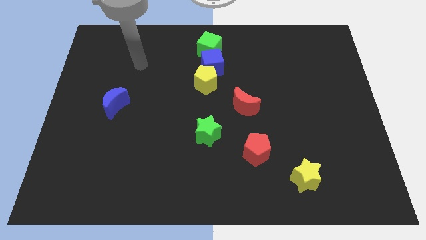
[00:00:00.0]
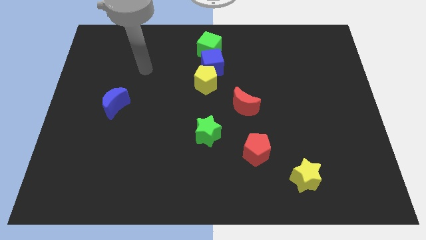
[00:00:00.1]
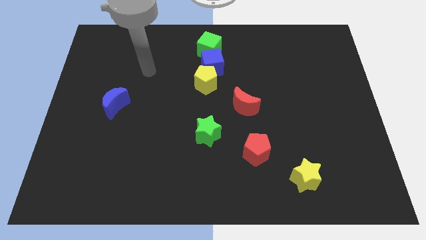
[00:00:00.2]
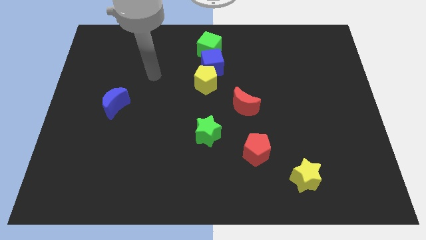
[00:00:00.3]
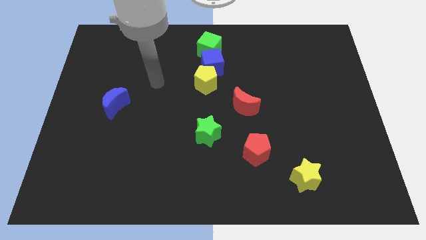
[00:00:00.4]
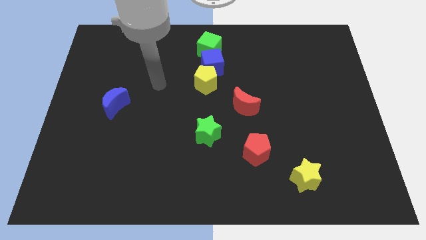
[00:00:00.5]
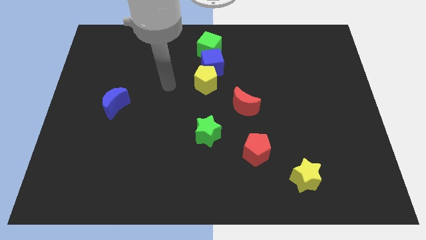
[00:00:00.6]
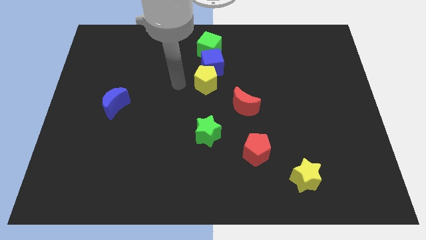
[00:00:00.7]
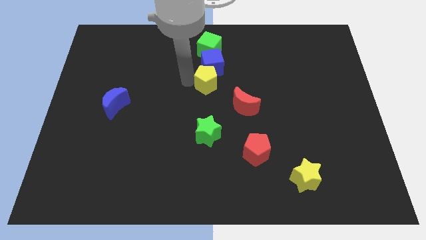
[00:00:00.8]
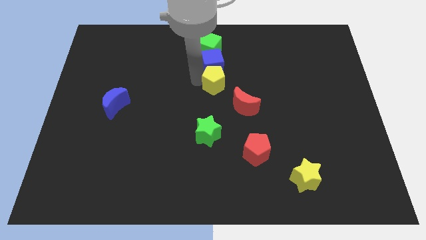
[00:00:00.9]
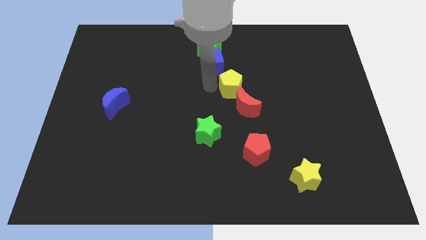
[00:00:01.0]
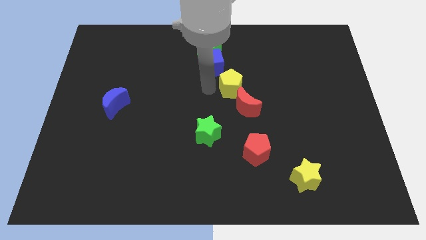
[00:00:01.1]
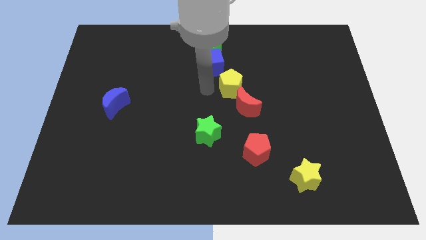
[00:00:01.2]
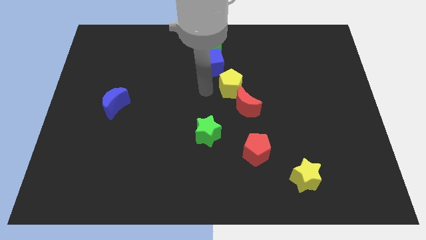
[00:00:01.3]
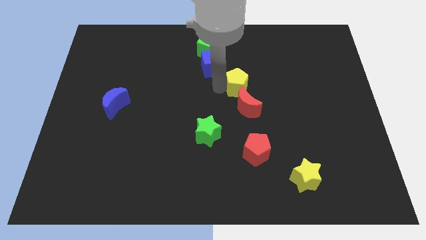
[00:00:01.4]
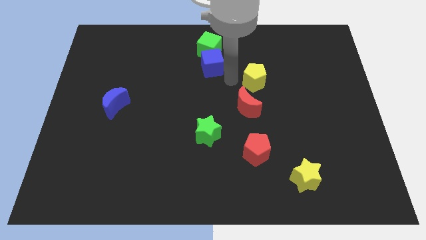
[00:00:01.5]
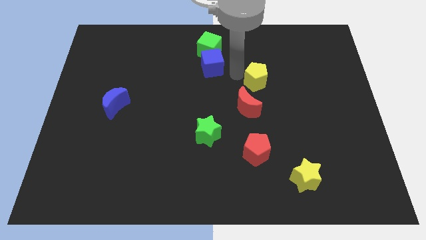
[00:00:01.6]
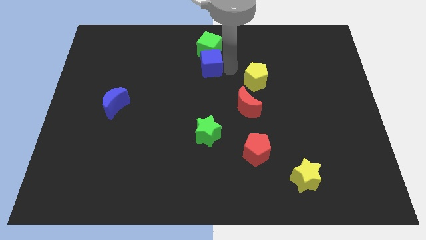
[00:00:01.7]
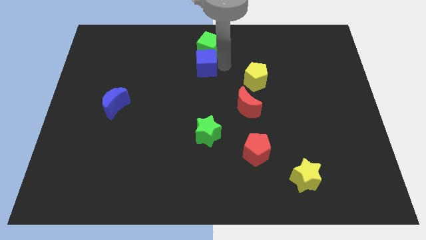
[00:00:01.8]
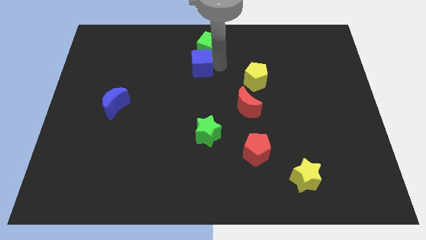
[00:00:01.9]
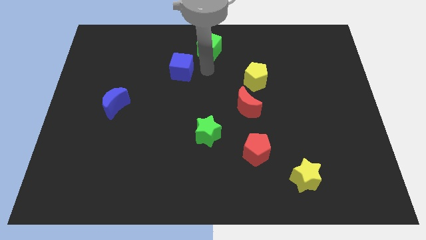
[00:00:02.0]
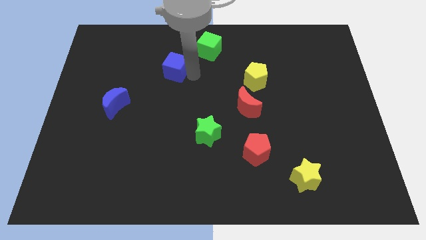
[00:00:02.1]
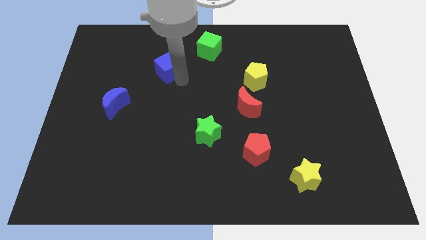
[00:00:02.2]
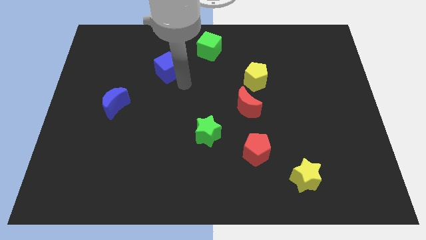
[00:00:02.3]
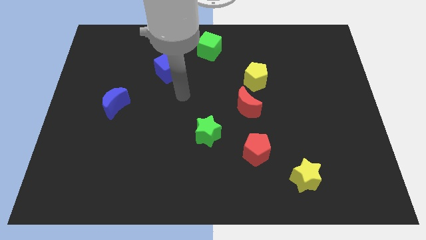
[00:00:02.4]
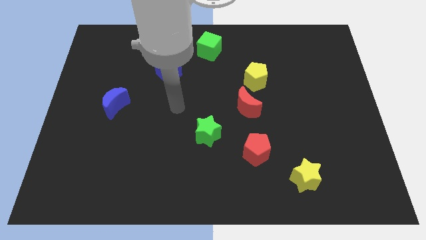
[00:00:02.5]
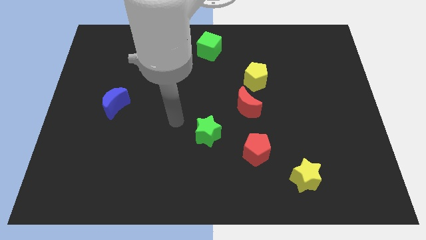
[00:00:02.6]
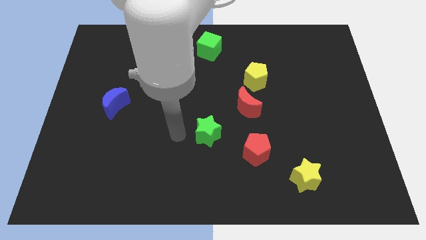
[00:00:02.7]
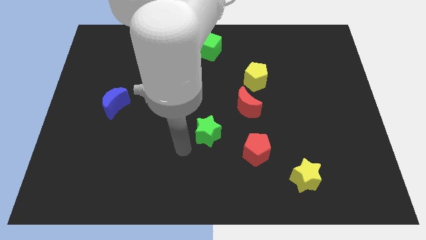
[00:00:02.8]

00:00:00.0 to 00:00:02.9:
separate blue cube and yellow pentagon

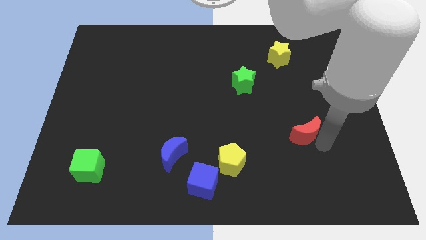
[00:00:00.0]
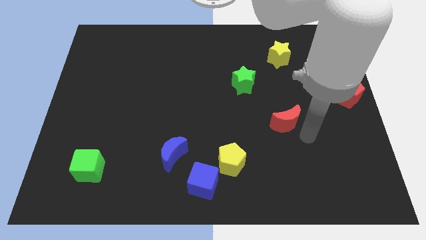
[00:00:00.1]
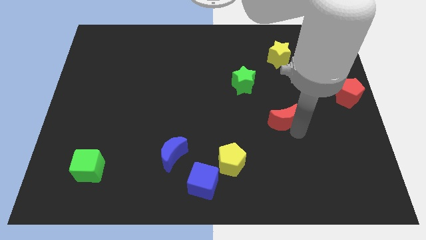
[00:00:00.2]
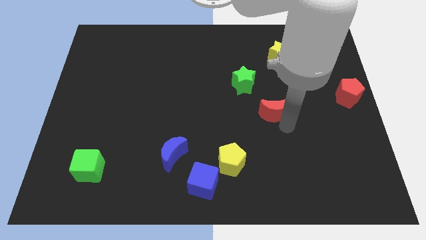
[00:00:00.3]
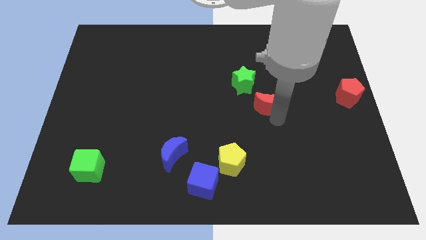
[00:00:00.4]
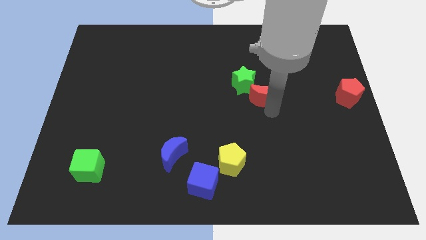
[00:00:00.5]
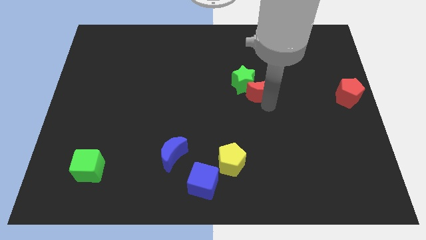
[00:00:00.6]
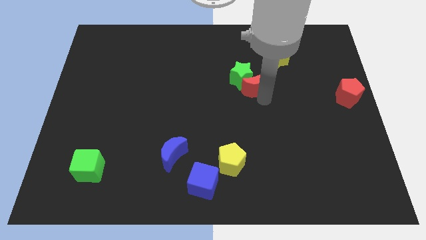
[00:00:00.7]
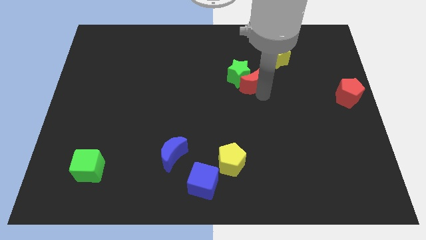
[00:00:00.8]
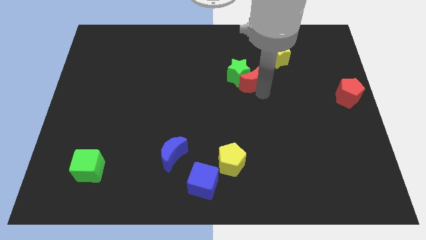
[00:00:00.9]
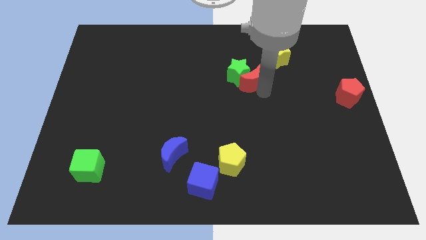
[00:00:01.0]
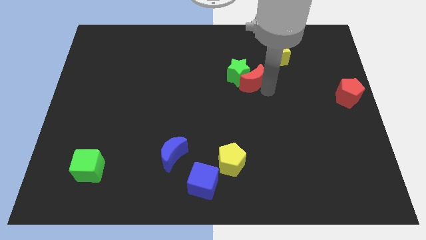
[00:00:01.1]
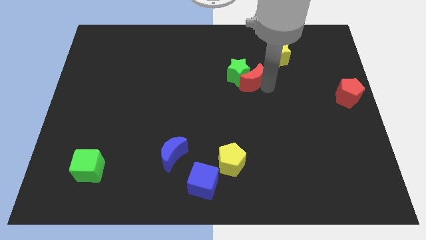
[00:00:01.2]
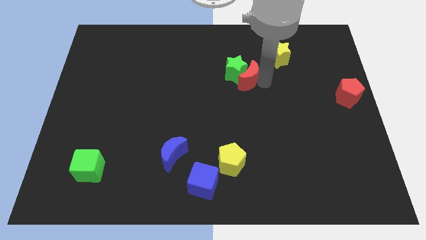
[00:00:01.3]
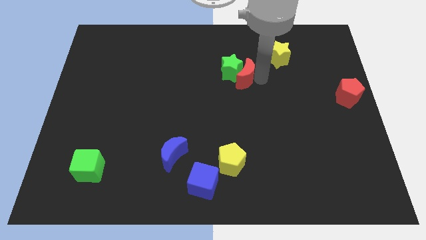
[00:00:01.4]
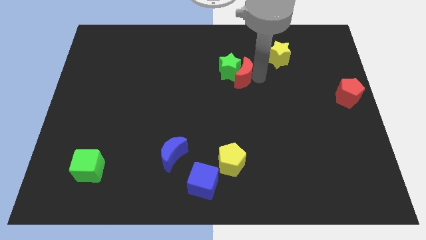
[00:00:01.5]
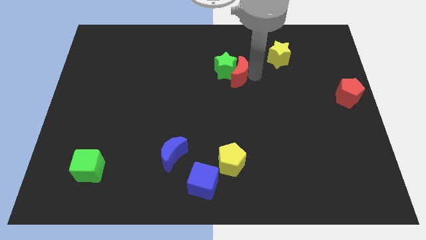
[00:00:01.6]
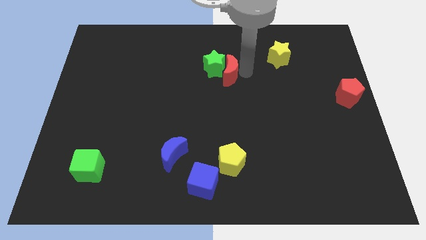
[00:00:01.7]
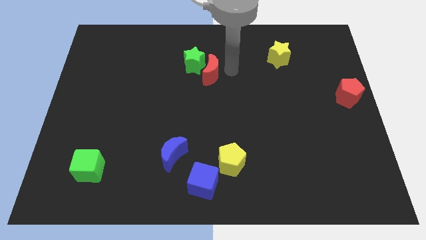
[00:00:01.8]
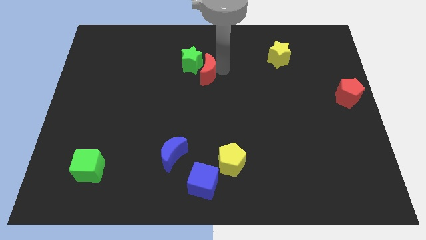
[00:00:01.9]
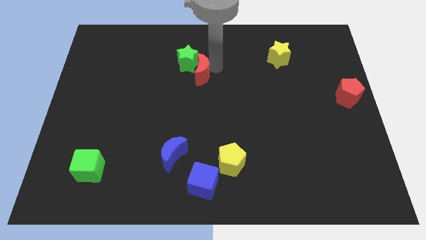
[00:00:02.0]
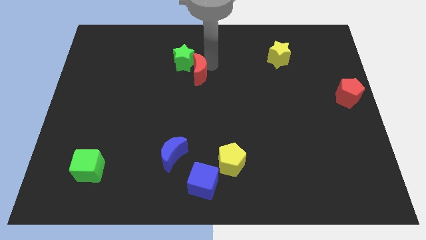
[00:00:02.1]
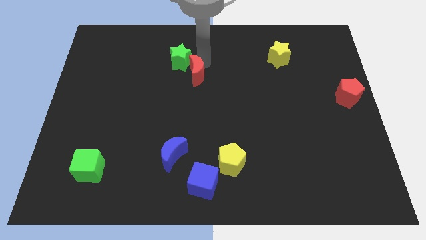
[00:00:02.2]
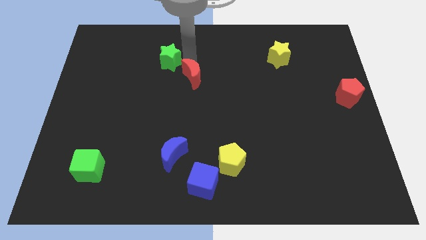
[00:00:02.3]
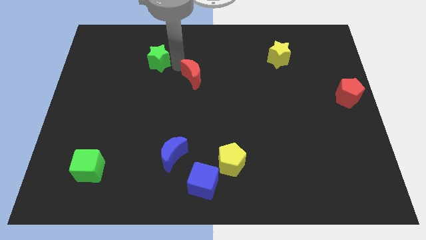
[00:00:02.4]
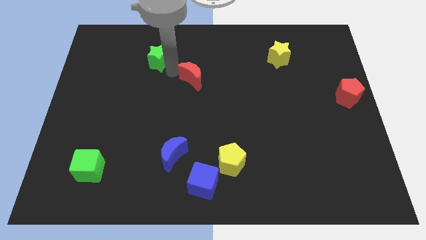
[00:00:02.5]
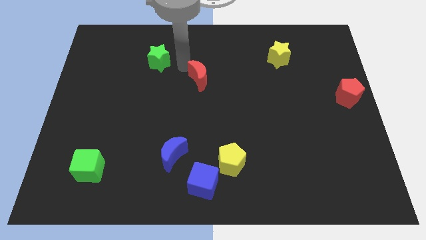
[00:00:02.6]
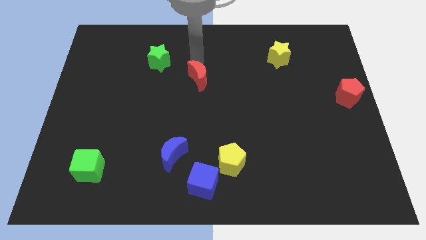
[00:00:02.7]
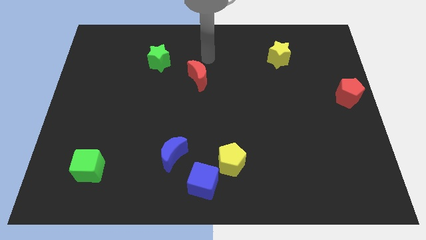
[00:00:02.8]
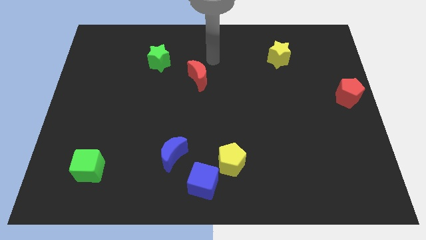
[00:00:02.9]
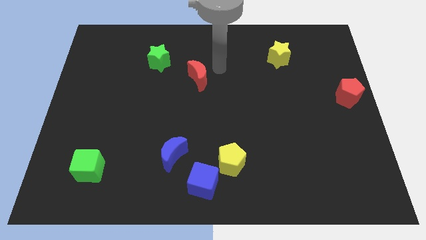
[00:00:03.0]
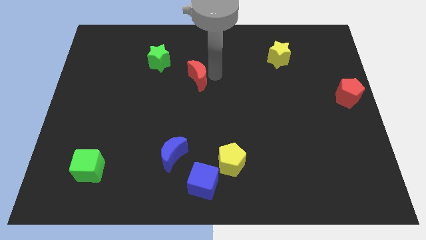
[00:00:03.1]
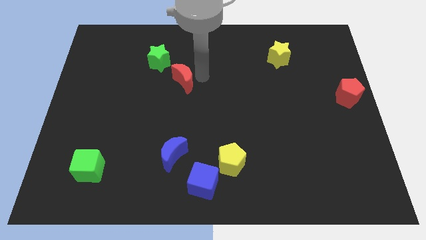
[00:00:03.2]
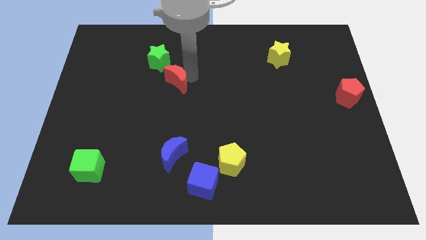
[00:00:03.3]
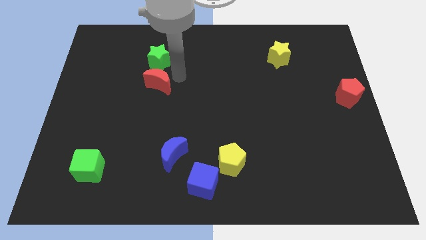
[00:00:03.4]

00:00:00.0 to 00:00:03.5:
separate the red moon and the green star

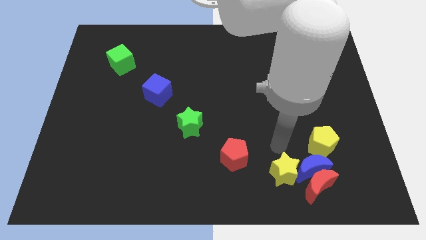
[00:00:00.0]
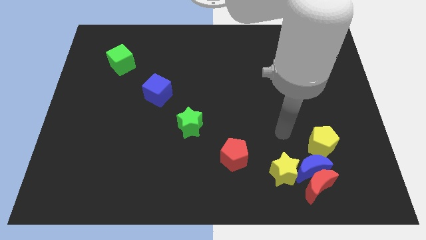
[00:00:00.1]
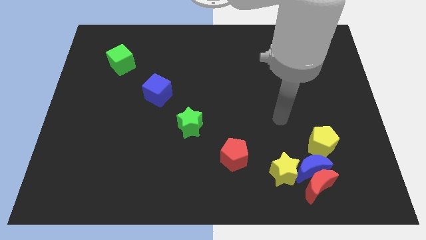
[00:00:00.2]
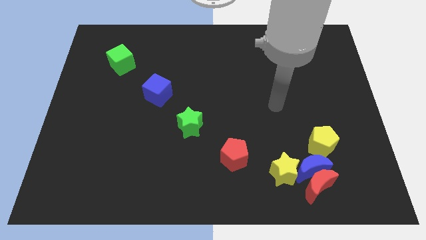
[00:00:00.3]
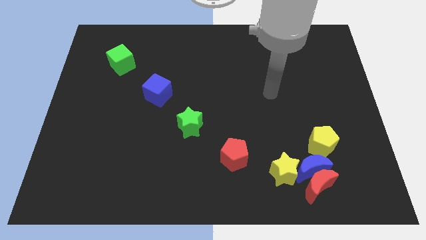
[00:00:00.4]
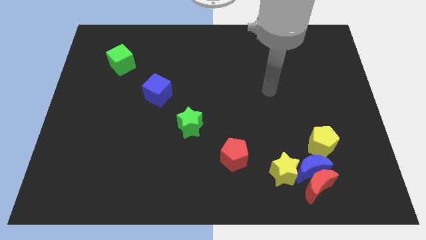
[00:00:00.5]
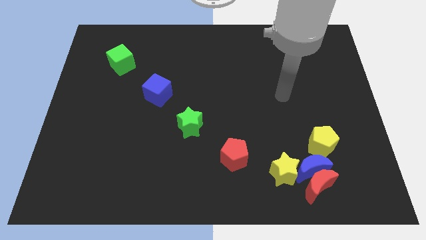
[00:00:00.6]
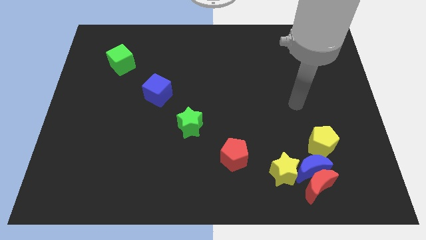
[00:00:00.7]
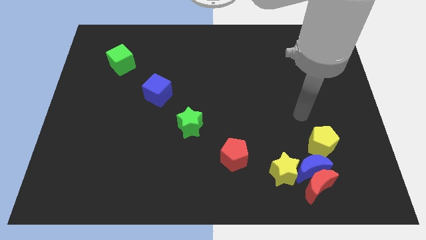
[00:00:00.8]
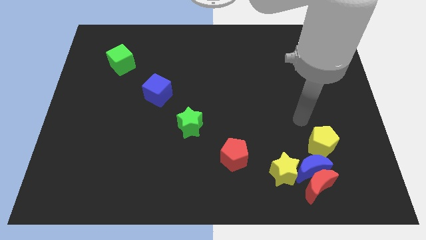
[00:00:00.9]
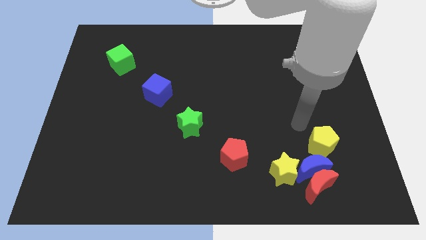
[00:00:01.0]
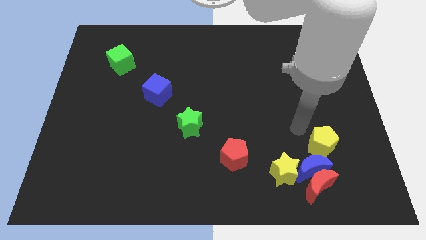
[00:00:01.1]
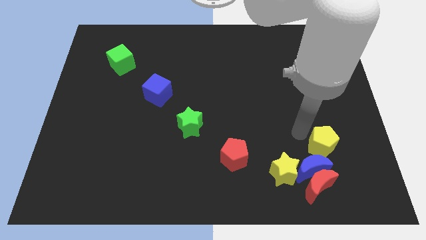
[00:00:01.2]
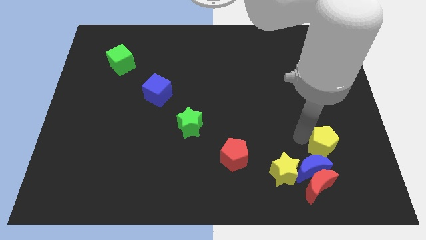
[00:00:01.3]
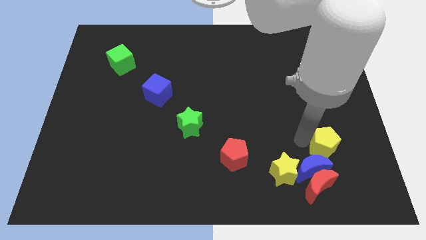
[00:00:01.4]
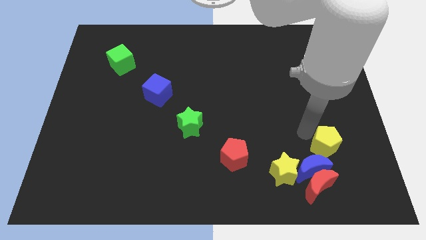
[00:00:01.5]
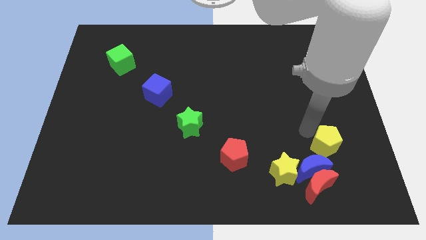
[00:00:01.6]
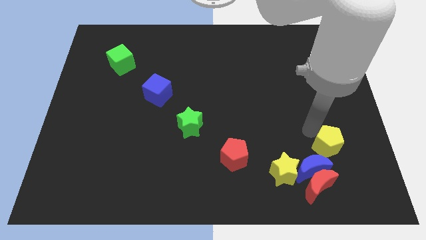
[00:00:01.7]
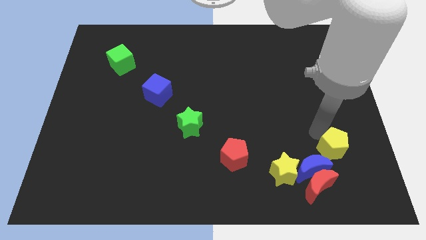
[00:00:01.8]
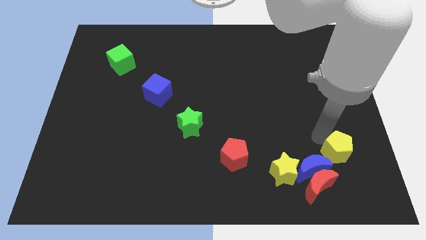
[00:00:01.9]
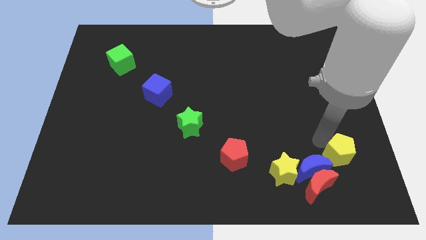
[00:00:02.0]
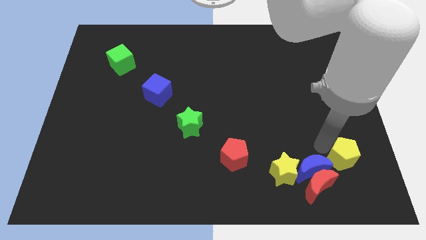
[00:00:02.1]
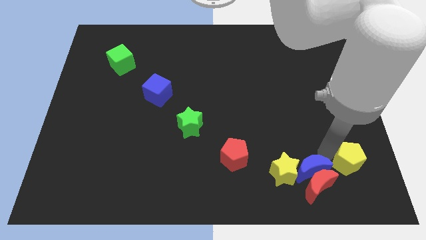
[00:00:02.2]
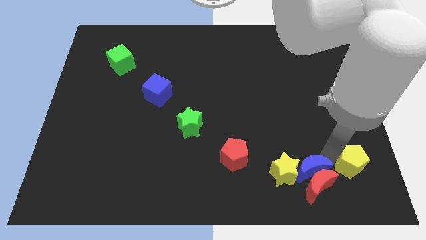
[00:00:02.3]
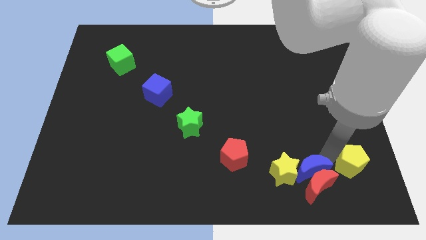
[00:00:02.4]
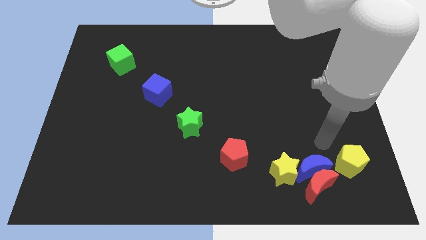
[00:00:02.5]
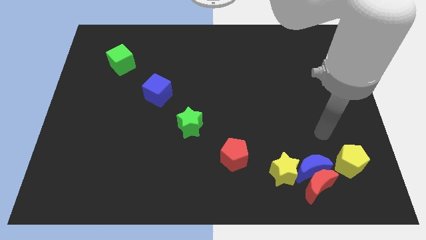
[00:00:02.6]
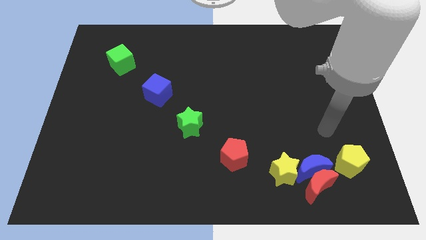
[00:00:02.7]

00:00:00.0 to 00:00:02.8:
move the yellow pentagon at the top right of the red crescent
